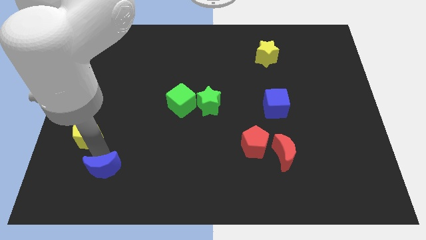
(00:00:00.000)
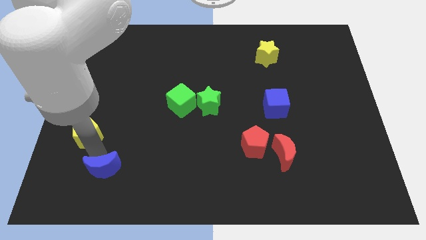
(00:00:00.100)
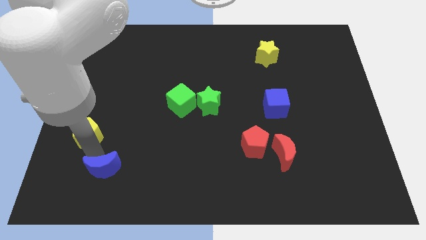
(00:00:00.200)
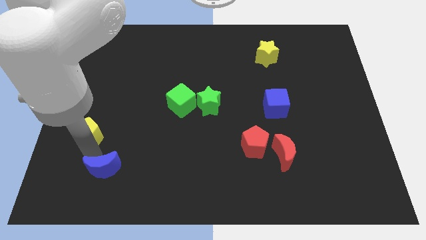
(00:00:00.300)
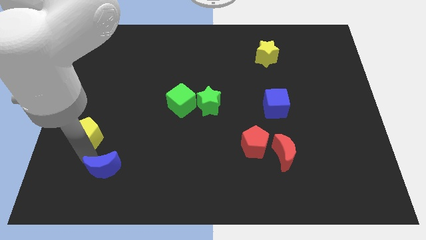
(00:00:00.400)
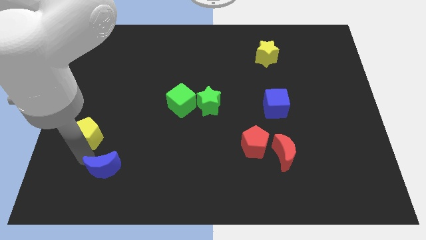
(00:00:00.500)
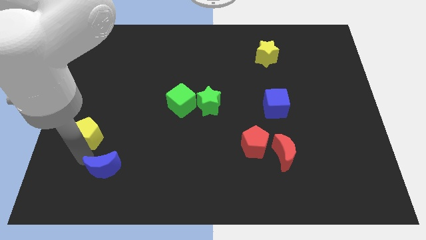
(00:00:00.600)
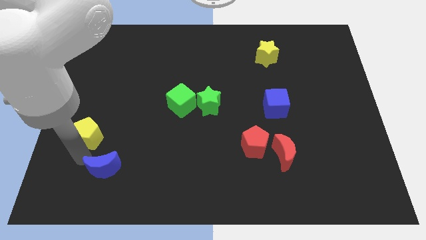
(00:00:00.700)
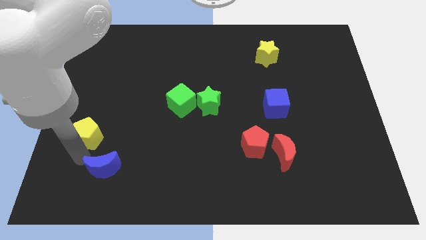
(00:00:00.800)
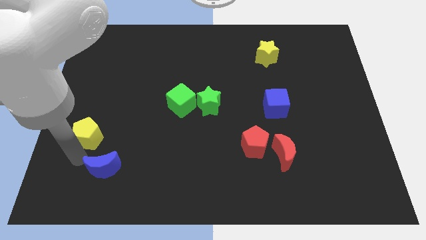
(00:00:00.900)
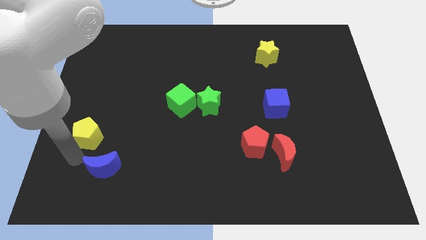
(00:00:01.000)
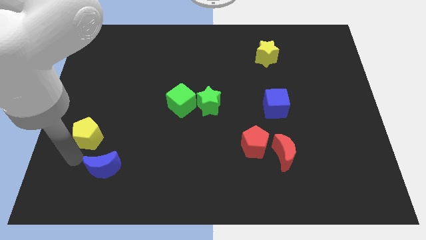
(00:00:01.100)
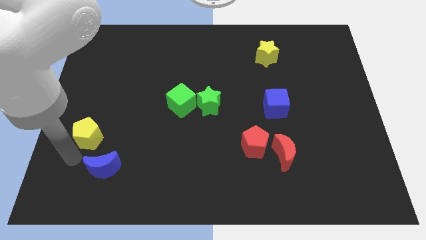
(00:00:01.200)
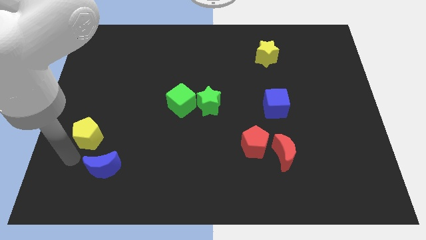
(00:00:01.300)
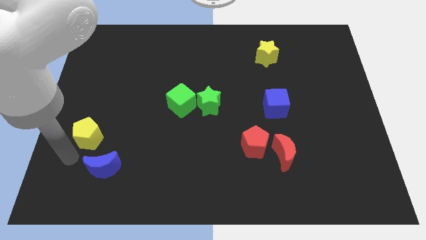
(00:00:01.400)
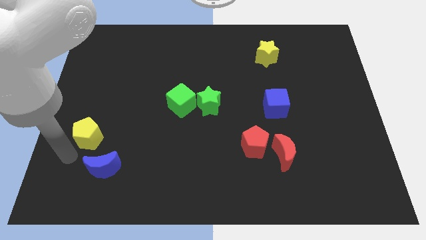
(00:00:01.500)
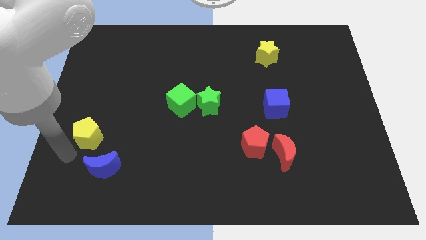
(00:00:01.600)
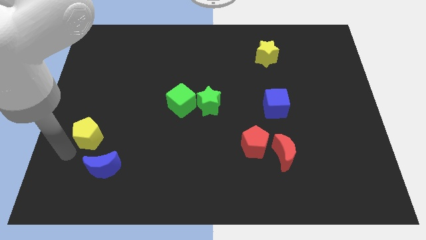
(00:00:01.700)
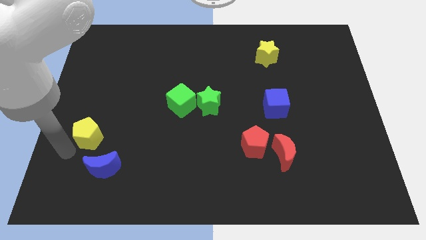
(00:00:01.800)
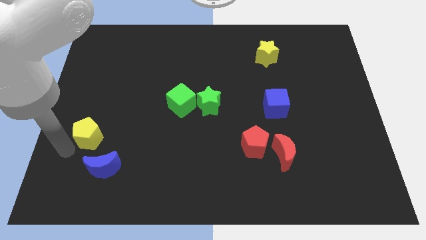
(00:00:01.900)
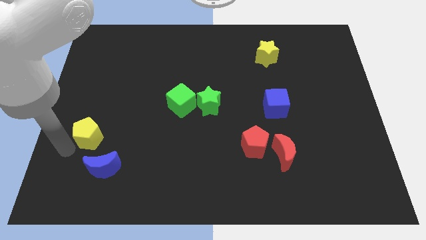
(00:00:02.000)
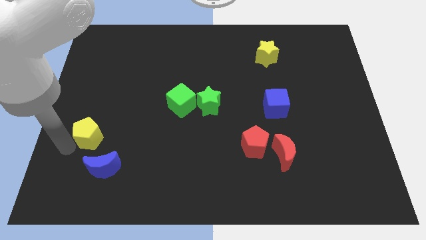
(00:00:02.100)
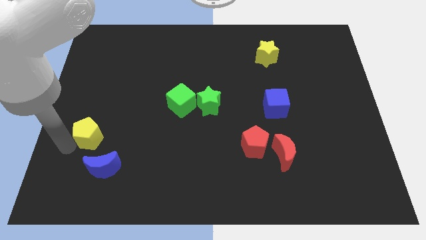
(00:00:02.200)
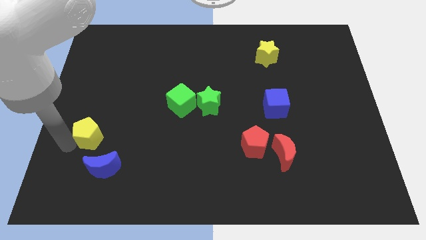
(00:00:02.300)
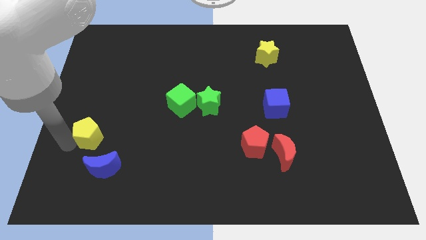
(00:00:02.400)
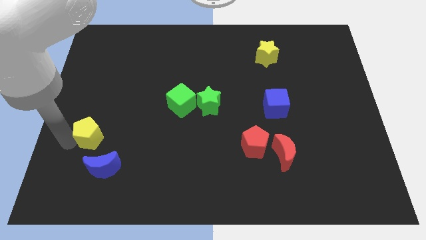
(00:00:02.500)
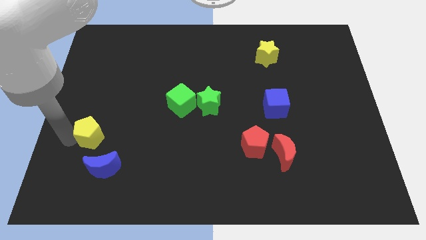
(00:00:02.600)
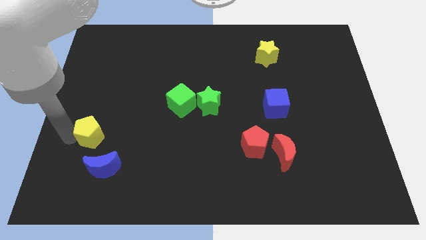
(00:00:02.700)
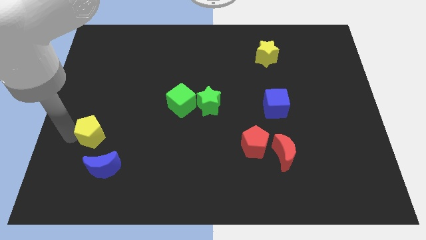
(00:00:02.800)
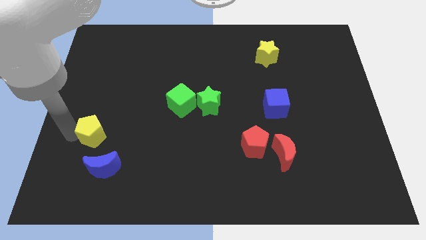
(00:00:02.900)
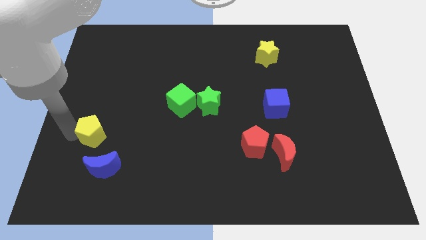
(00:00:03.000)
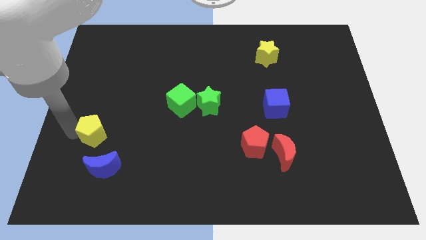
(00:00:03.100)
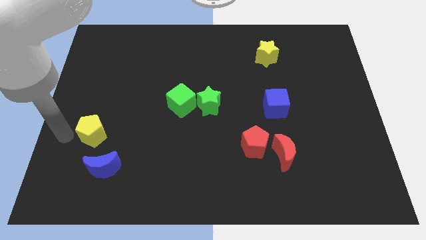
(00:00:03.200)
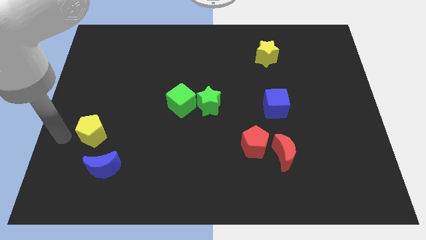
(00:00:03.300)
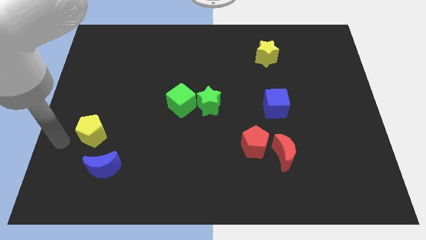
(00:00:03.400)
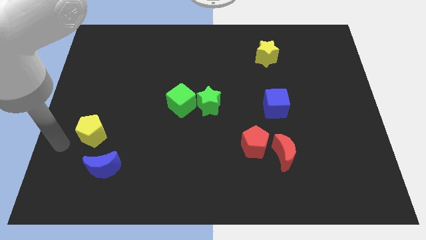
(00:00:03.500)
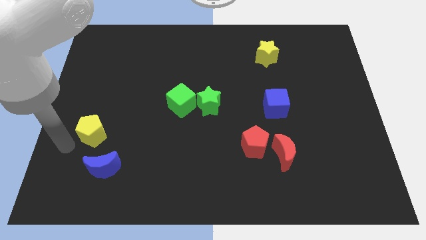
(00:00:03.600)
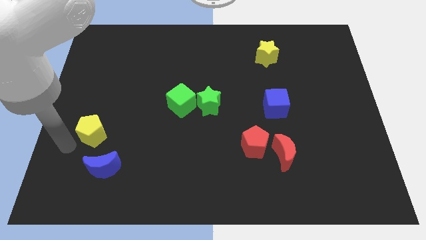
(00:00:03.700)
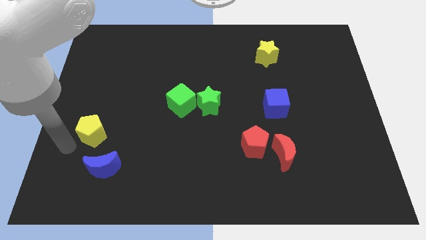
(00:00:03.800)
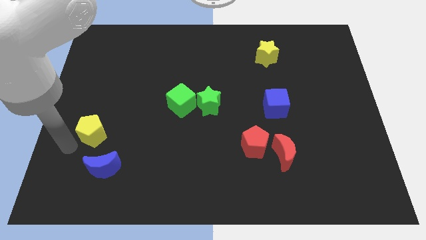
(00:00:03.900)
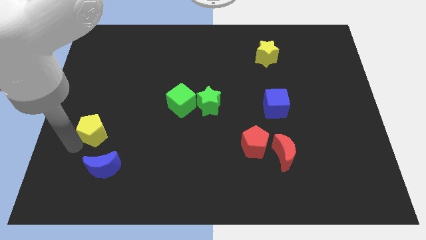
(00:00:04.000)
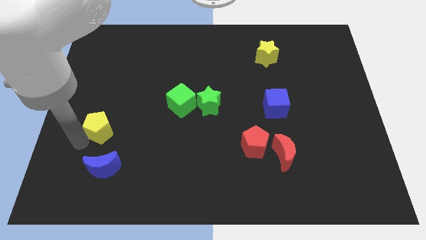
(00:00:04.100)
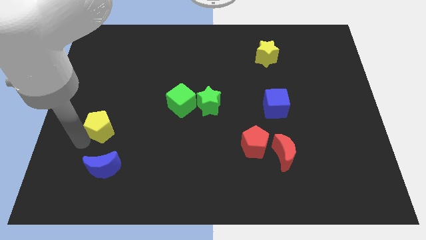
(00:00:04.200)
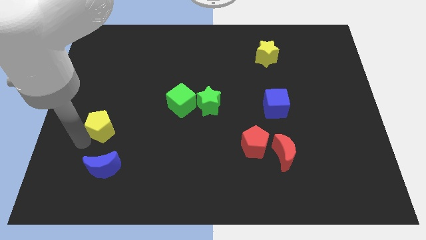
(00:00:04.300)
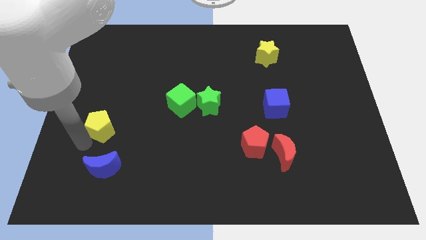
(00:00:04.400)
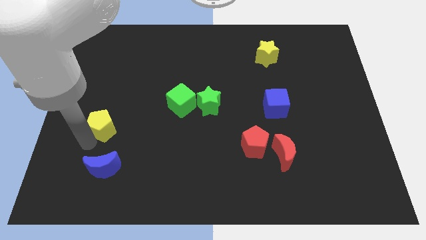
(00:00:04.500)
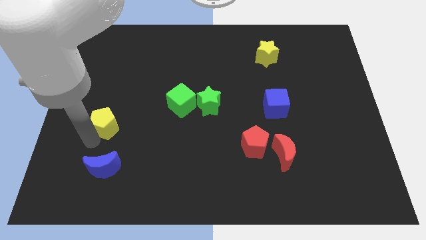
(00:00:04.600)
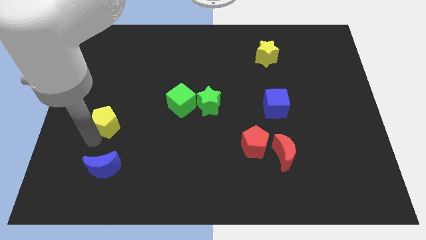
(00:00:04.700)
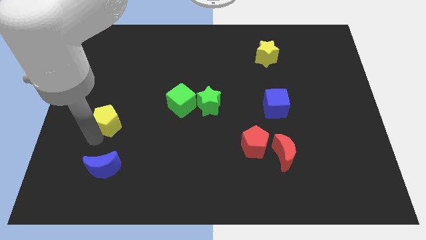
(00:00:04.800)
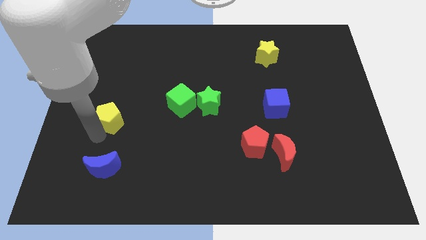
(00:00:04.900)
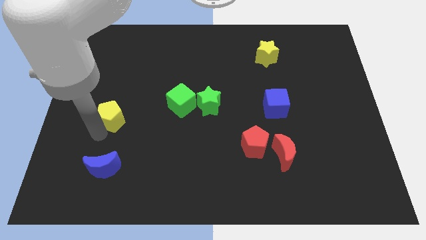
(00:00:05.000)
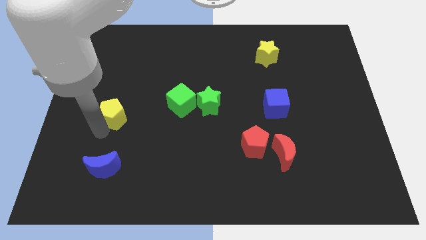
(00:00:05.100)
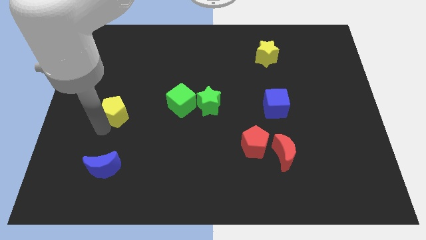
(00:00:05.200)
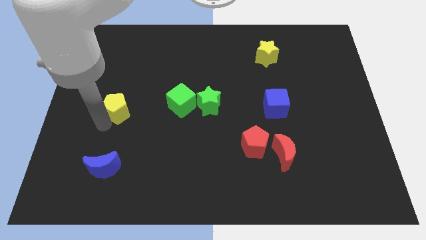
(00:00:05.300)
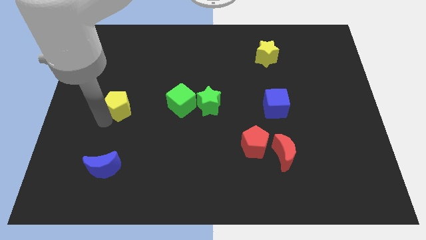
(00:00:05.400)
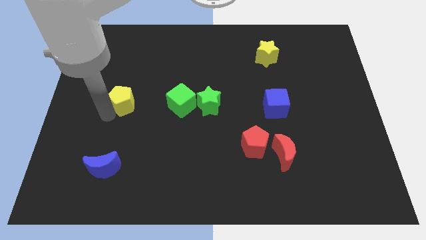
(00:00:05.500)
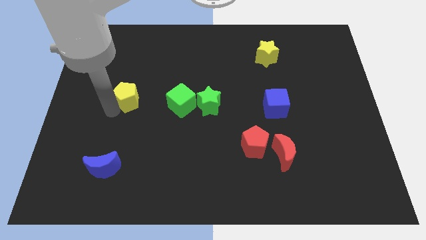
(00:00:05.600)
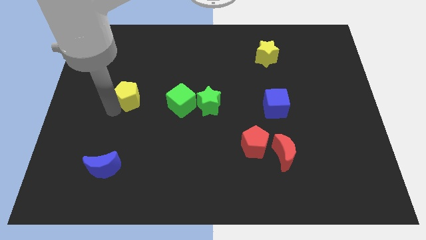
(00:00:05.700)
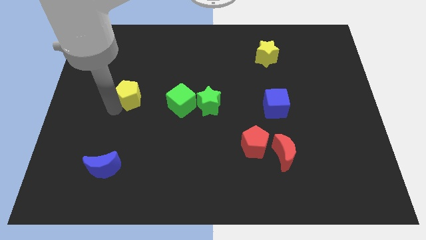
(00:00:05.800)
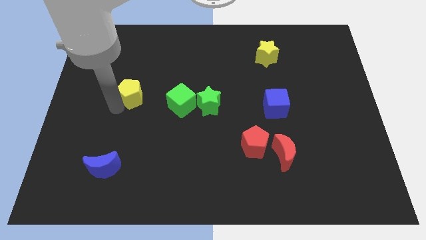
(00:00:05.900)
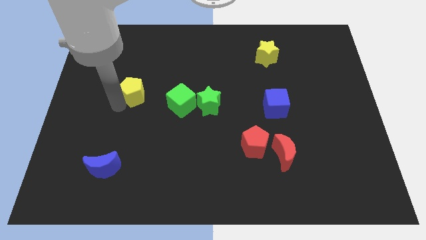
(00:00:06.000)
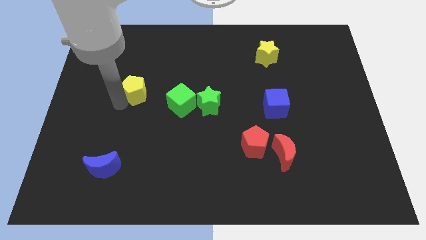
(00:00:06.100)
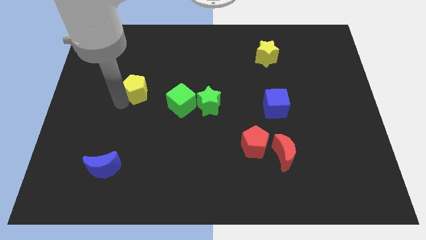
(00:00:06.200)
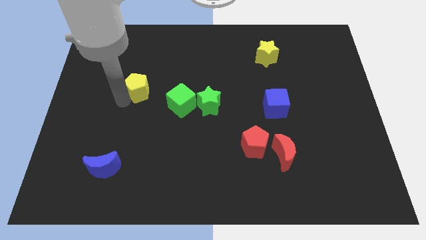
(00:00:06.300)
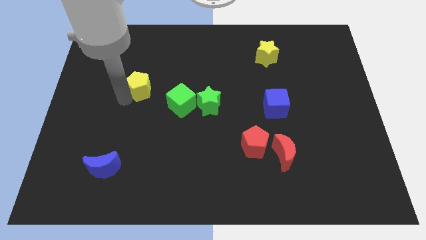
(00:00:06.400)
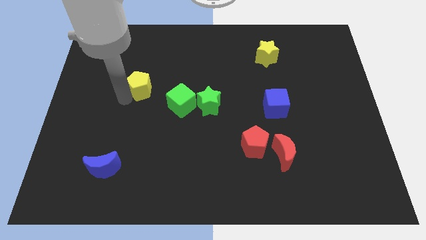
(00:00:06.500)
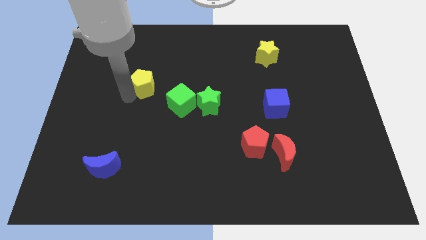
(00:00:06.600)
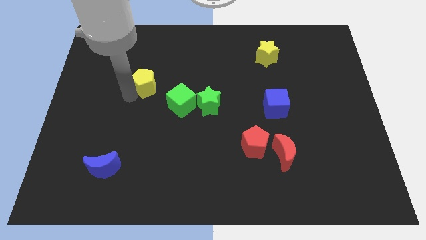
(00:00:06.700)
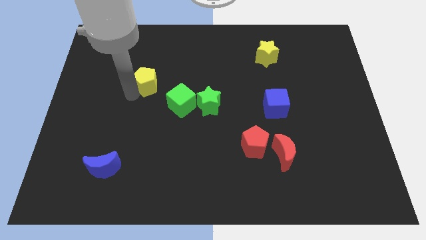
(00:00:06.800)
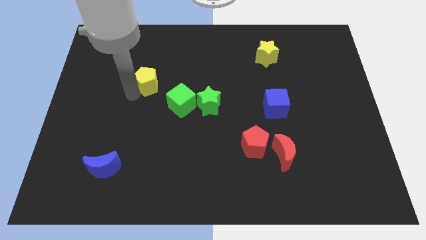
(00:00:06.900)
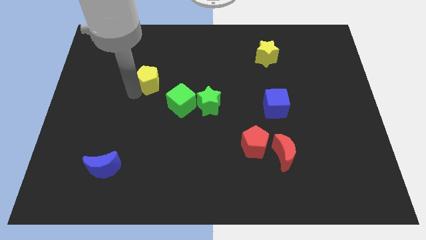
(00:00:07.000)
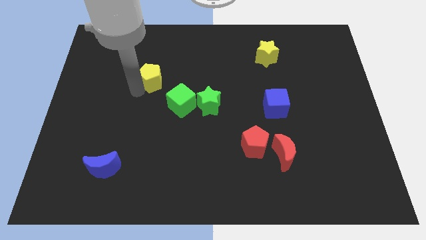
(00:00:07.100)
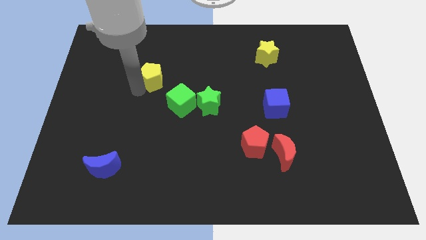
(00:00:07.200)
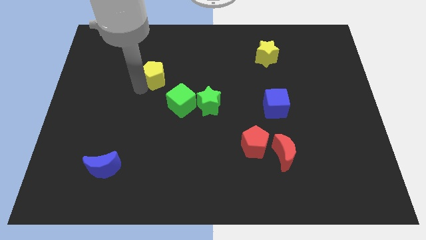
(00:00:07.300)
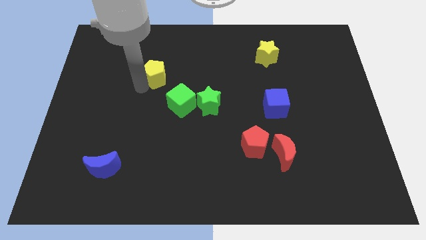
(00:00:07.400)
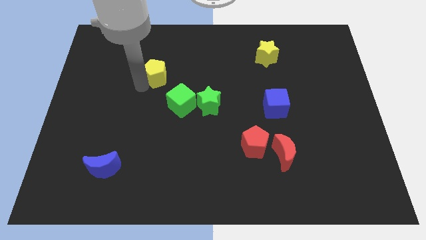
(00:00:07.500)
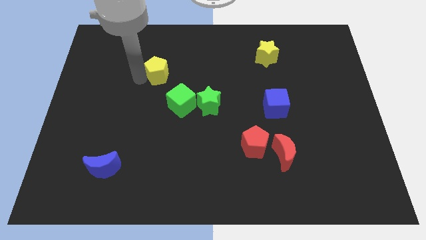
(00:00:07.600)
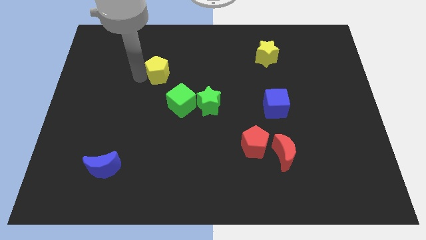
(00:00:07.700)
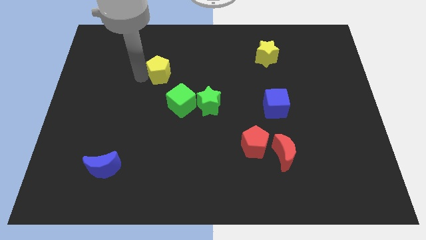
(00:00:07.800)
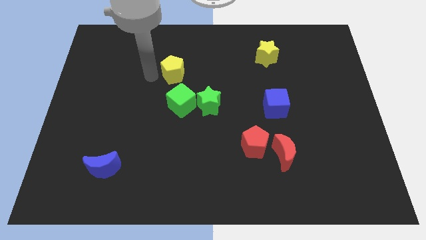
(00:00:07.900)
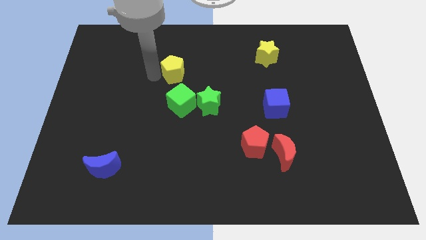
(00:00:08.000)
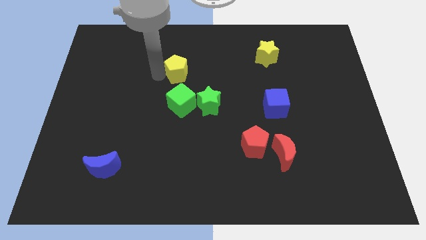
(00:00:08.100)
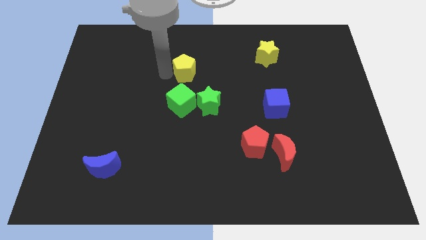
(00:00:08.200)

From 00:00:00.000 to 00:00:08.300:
move the yellow pentagon to the top of the green cube

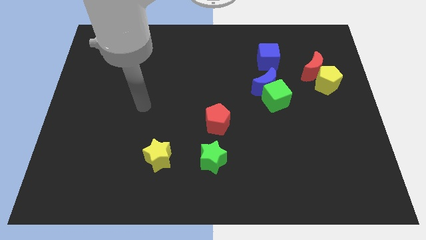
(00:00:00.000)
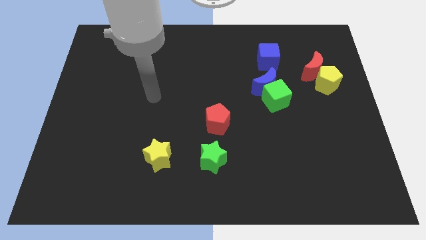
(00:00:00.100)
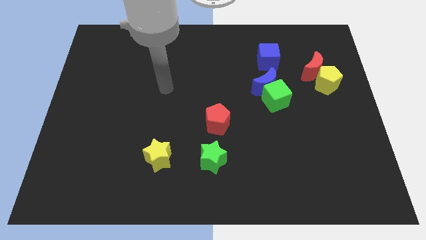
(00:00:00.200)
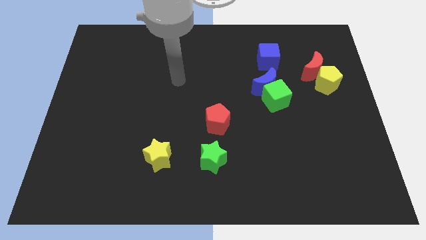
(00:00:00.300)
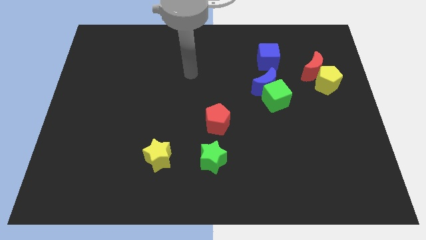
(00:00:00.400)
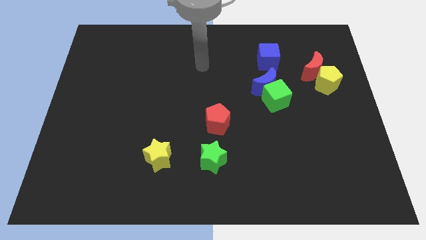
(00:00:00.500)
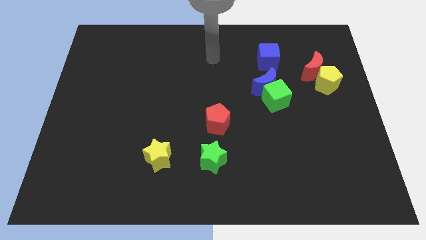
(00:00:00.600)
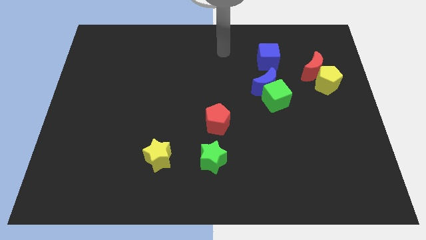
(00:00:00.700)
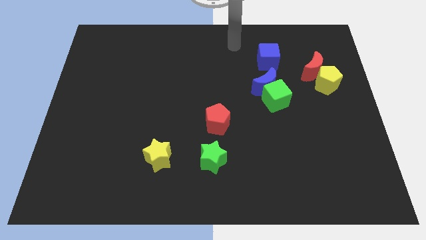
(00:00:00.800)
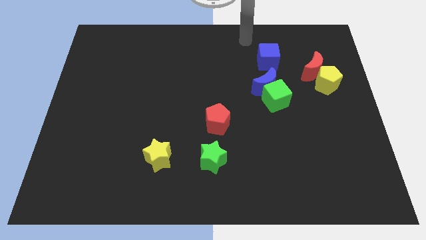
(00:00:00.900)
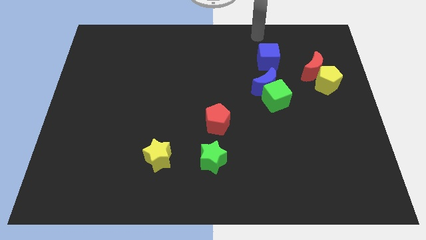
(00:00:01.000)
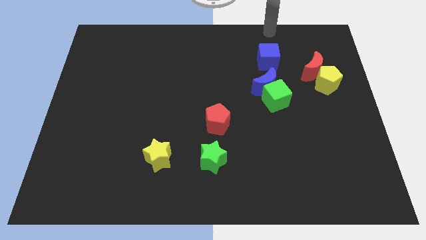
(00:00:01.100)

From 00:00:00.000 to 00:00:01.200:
push your arm vertically above the blue cube
